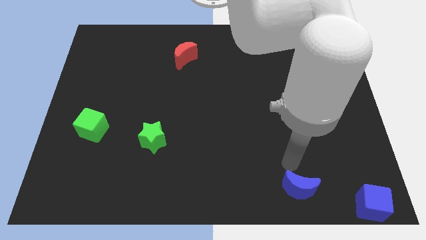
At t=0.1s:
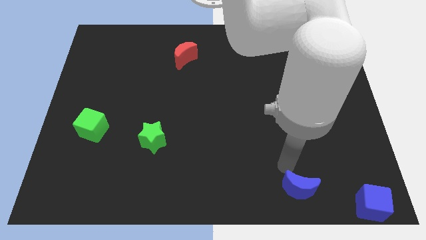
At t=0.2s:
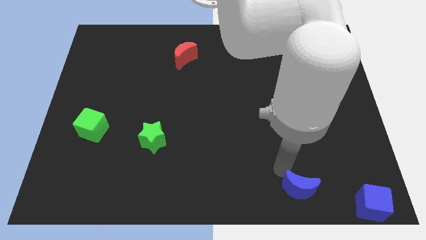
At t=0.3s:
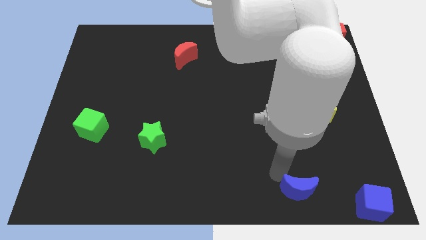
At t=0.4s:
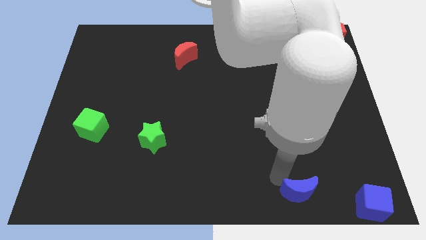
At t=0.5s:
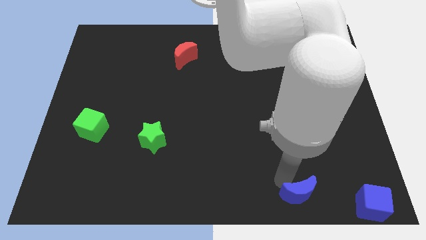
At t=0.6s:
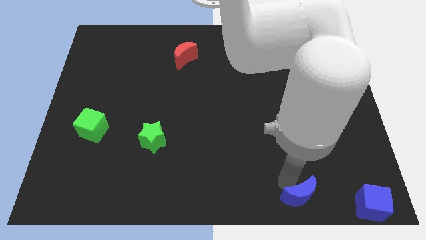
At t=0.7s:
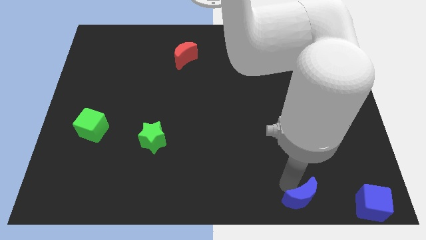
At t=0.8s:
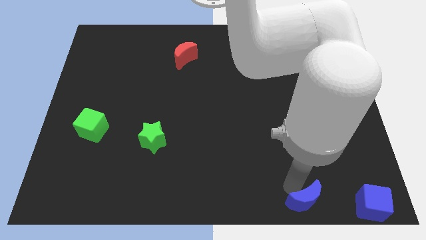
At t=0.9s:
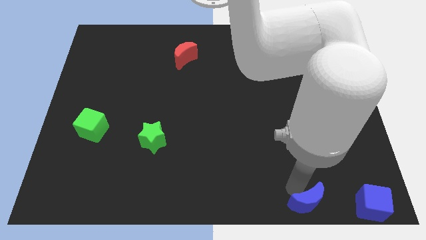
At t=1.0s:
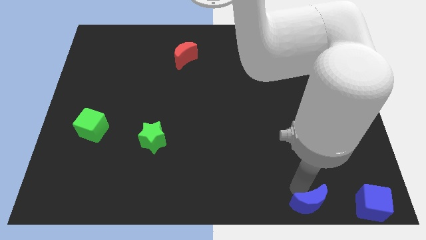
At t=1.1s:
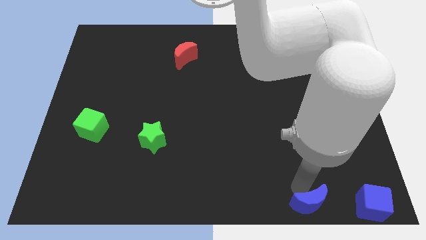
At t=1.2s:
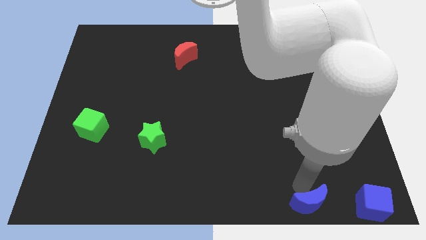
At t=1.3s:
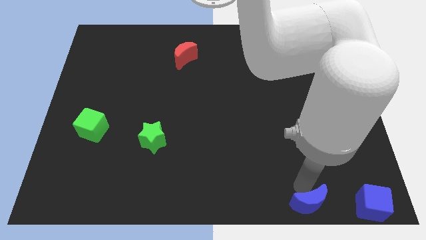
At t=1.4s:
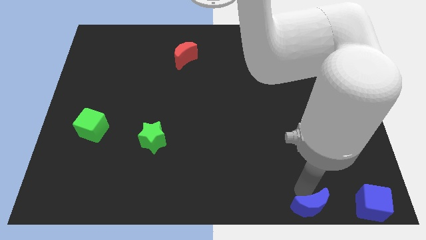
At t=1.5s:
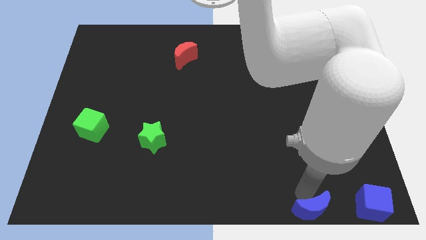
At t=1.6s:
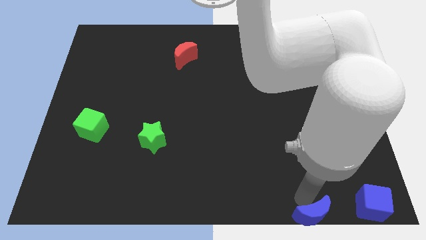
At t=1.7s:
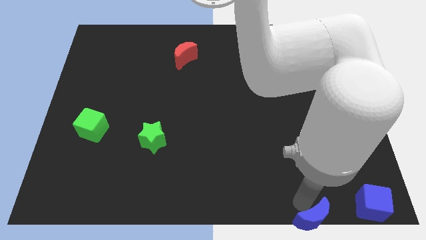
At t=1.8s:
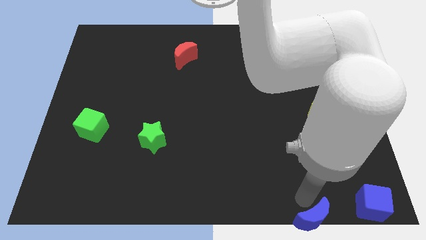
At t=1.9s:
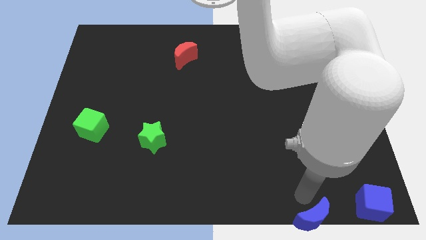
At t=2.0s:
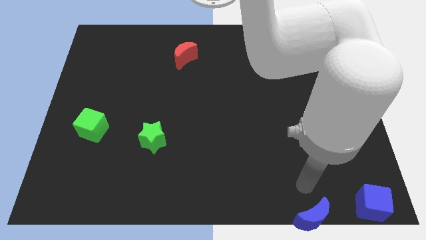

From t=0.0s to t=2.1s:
slide the blue moon to the bottom

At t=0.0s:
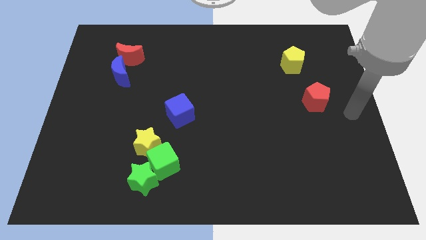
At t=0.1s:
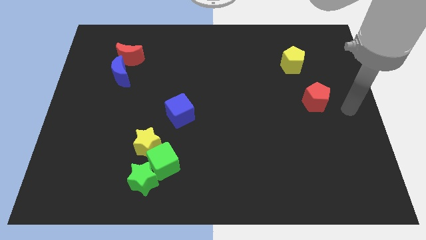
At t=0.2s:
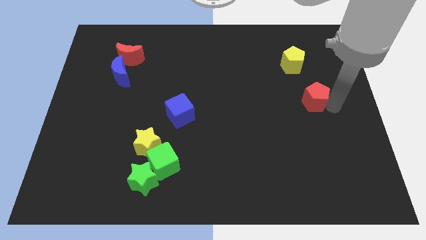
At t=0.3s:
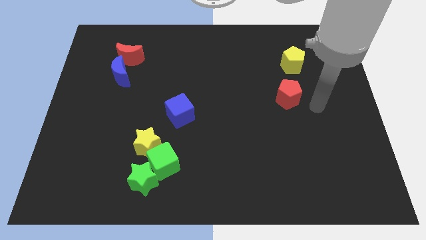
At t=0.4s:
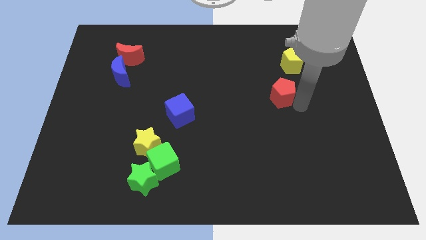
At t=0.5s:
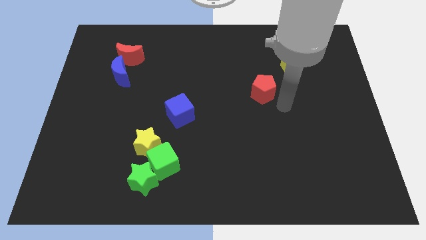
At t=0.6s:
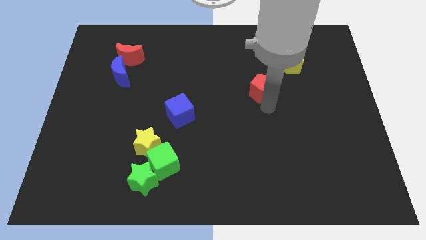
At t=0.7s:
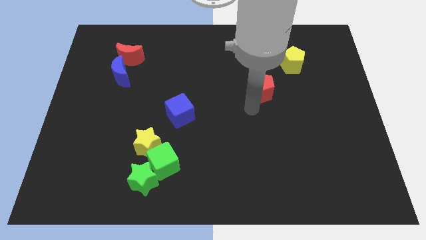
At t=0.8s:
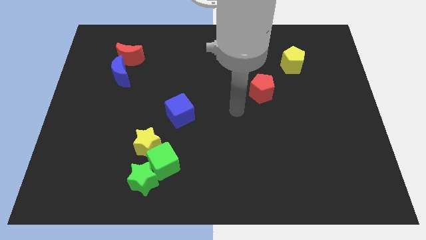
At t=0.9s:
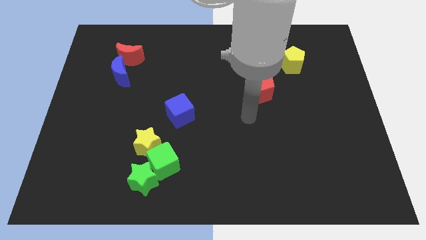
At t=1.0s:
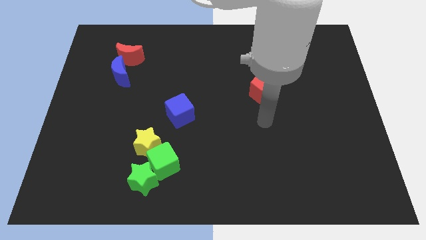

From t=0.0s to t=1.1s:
slightly push the red pentagon towards the left side

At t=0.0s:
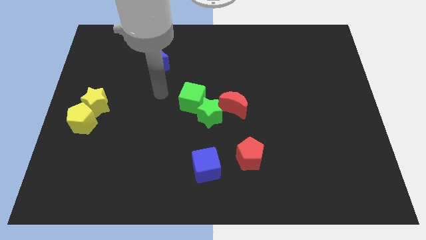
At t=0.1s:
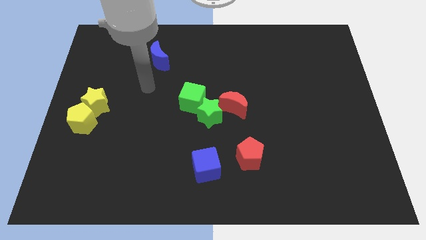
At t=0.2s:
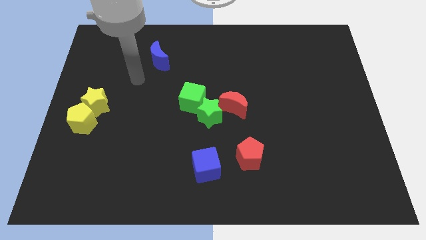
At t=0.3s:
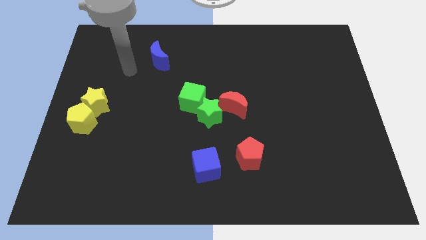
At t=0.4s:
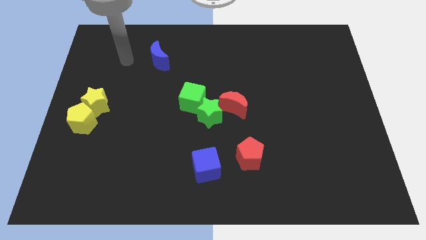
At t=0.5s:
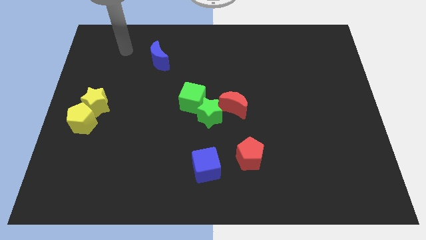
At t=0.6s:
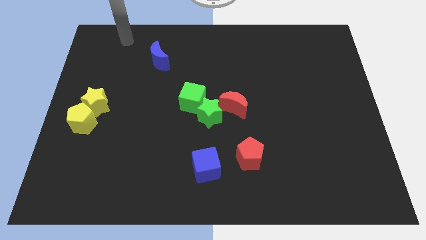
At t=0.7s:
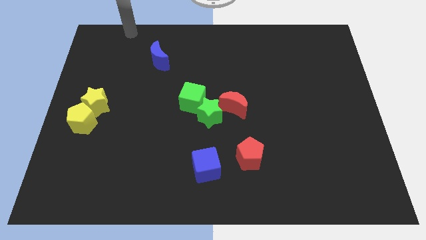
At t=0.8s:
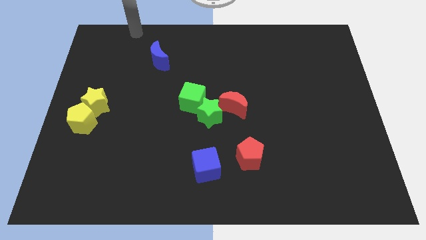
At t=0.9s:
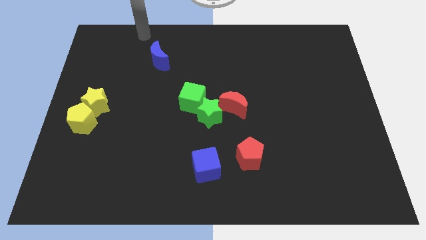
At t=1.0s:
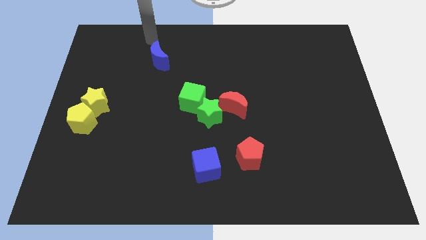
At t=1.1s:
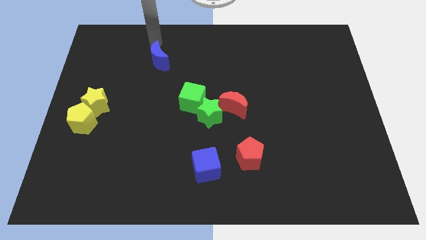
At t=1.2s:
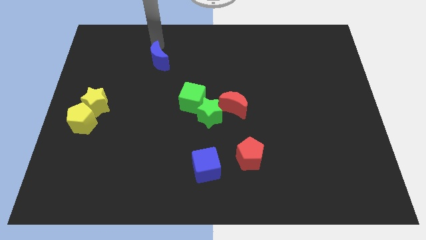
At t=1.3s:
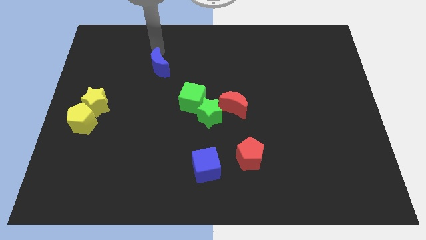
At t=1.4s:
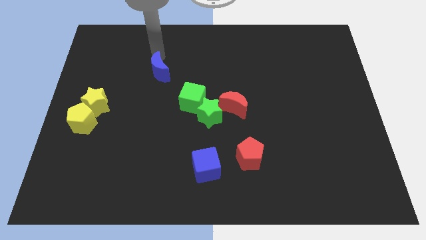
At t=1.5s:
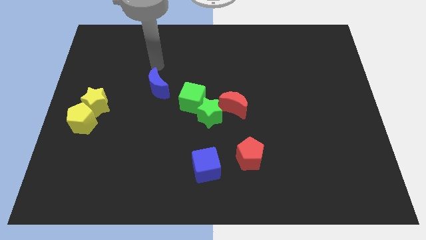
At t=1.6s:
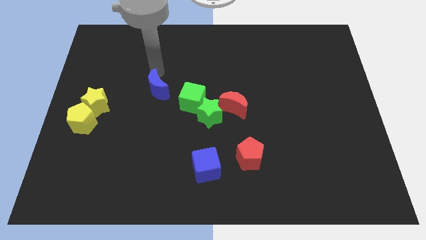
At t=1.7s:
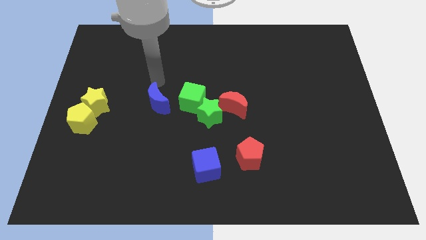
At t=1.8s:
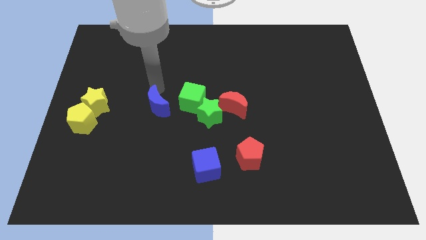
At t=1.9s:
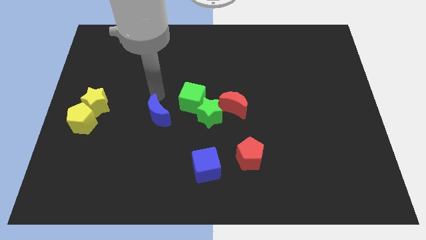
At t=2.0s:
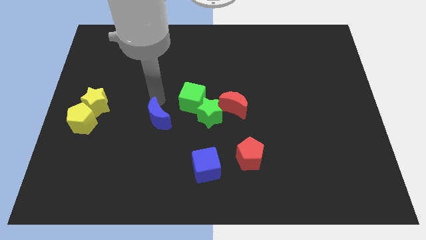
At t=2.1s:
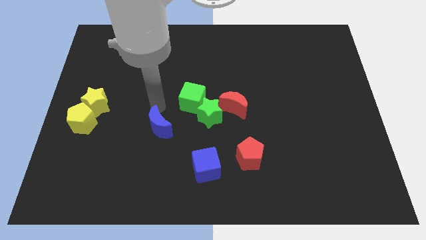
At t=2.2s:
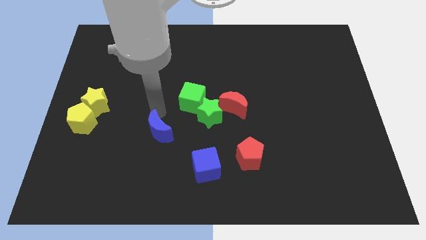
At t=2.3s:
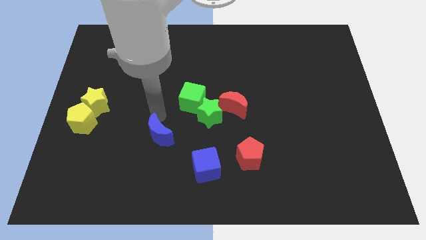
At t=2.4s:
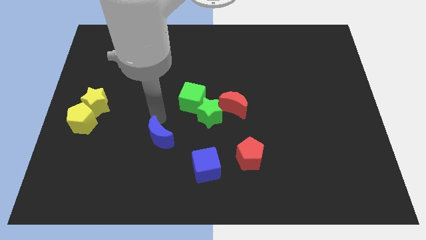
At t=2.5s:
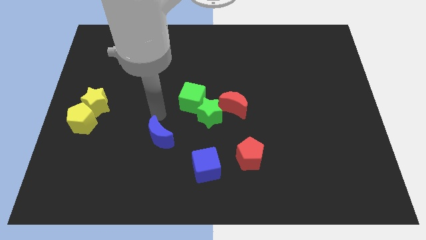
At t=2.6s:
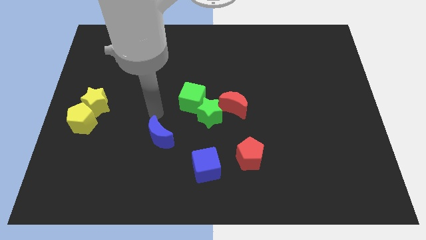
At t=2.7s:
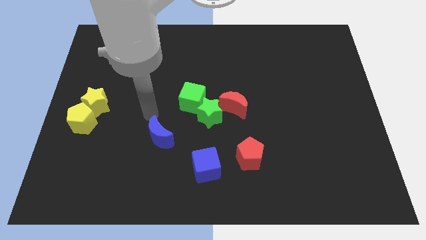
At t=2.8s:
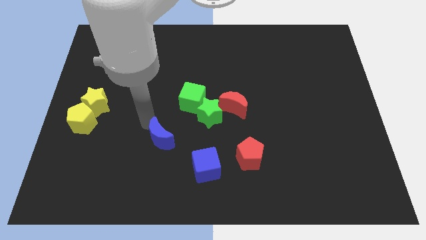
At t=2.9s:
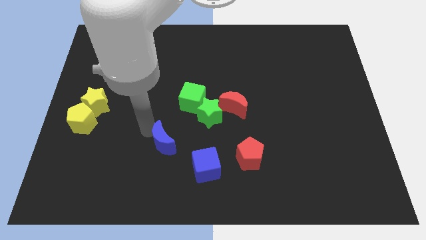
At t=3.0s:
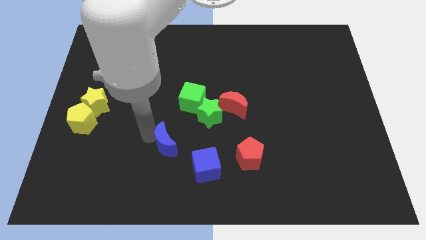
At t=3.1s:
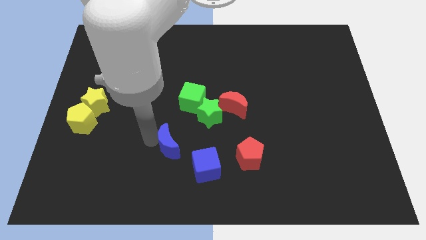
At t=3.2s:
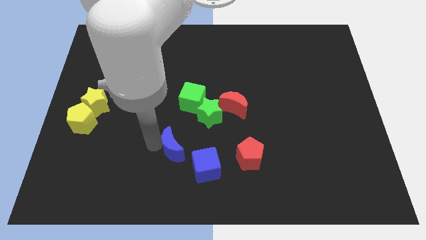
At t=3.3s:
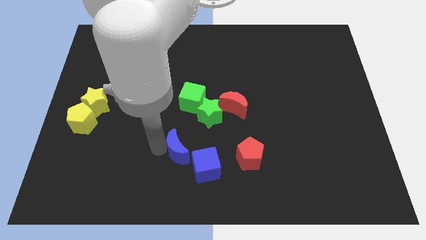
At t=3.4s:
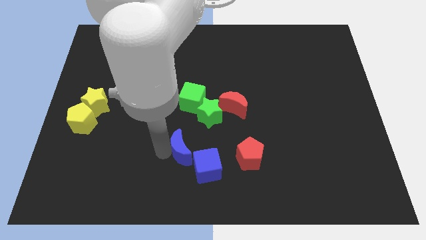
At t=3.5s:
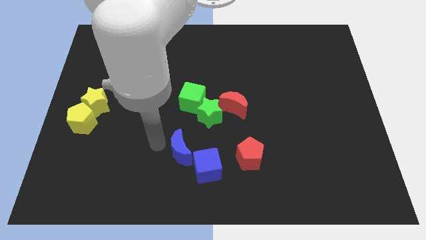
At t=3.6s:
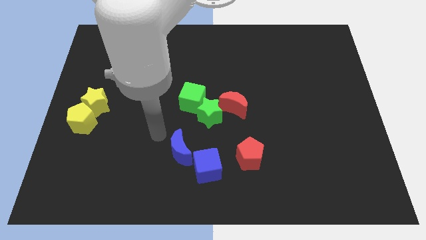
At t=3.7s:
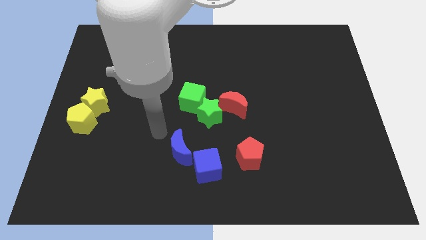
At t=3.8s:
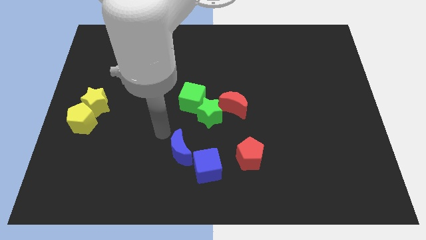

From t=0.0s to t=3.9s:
push the blue moon into the blue cube

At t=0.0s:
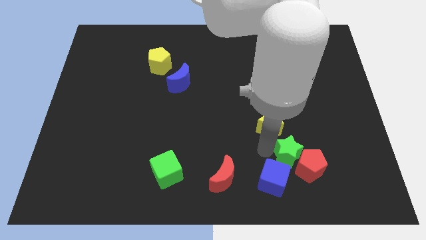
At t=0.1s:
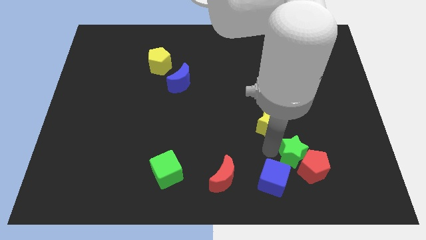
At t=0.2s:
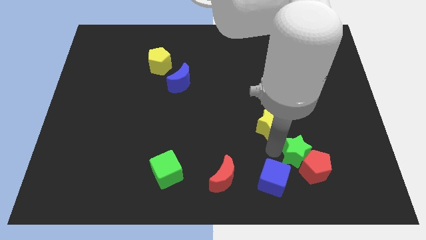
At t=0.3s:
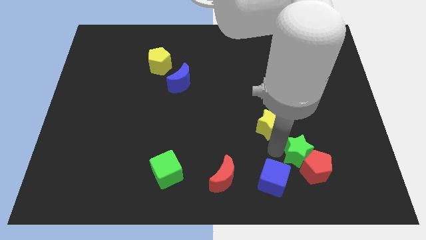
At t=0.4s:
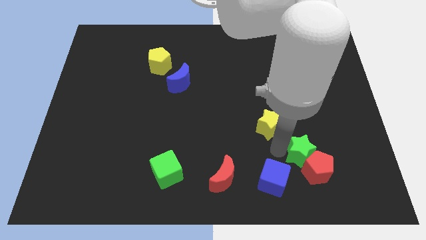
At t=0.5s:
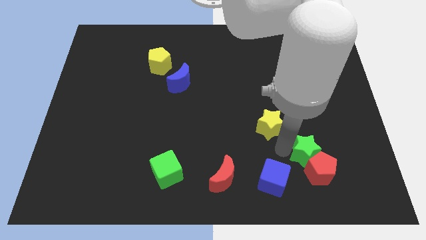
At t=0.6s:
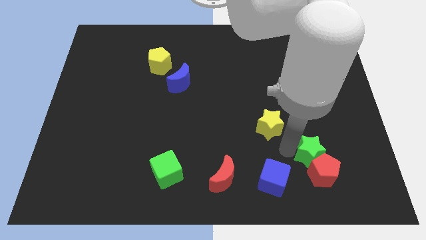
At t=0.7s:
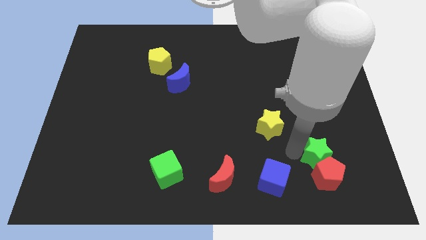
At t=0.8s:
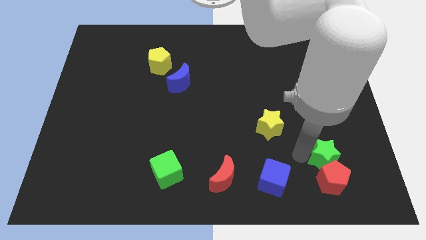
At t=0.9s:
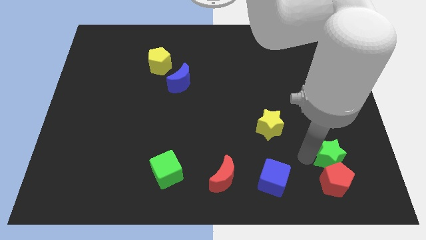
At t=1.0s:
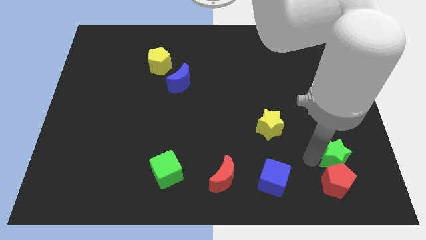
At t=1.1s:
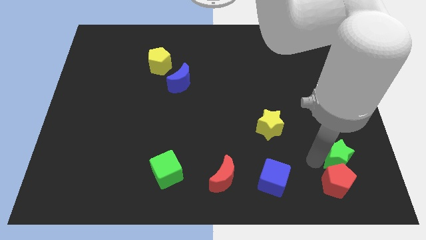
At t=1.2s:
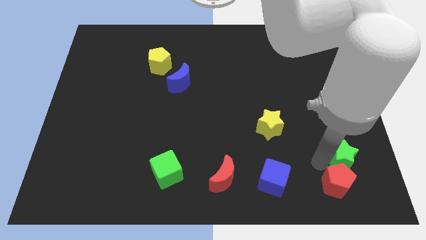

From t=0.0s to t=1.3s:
place the green star above the red pentagon

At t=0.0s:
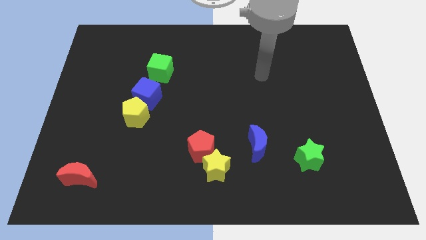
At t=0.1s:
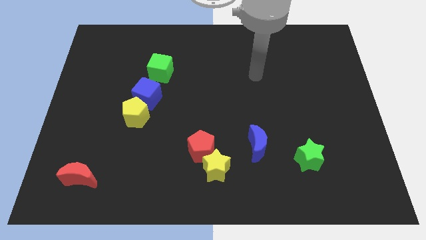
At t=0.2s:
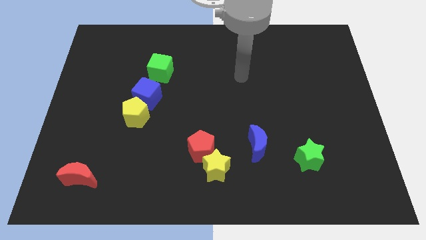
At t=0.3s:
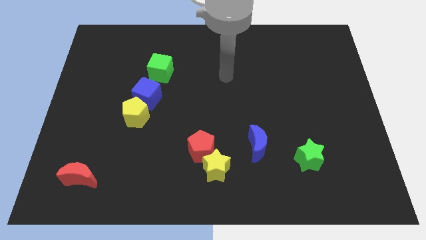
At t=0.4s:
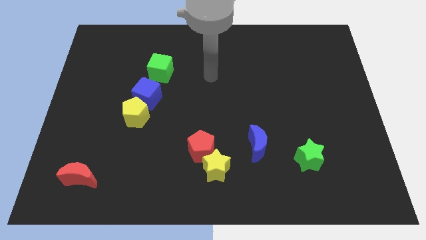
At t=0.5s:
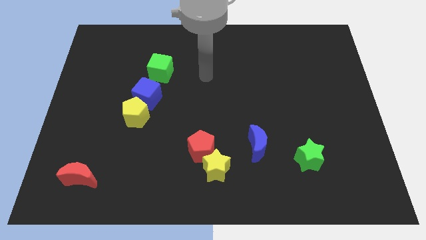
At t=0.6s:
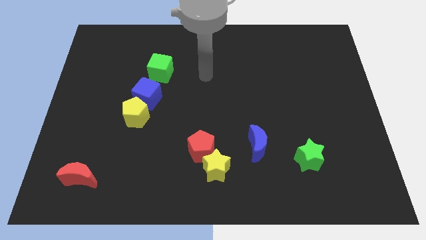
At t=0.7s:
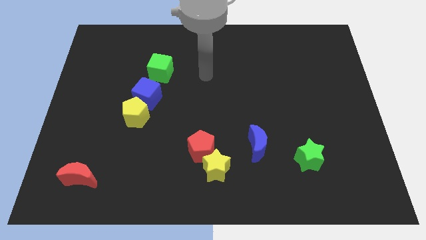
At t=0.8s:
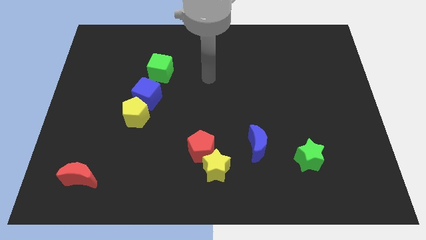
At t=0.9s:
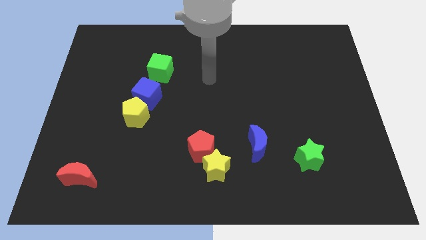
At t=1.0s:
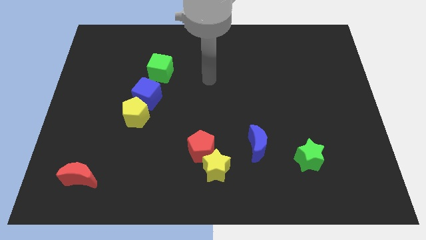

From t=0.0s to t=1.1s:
slide your arm to the right of green cube
